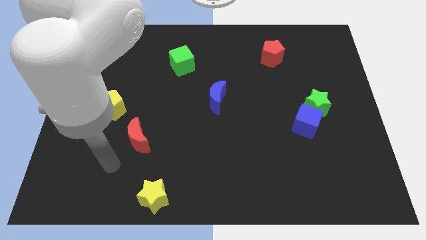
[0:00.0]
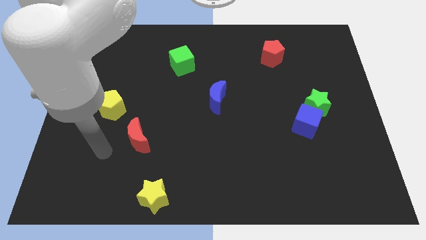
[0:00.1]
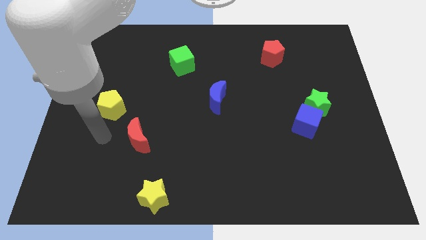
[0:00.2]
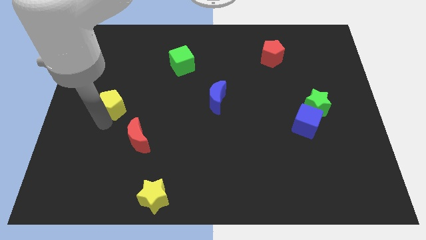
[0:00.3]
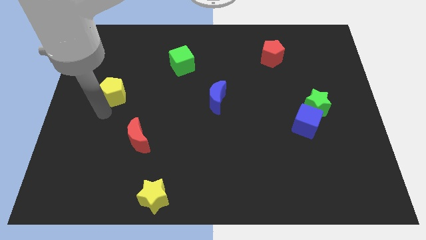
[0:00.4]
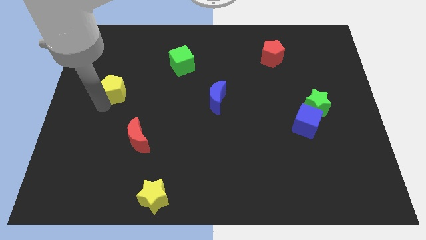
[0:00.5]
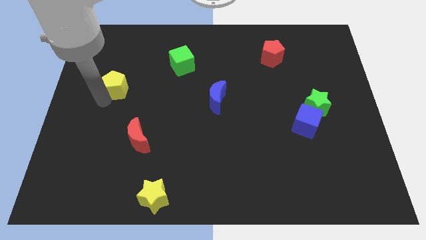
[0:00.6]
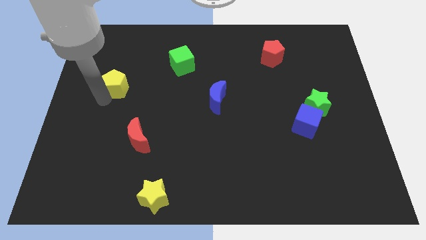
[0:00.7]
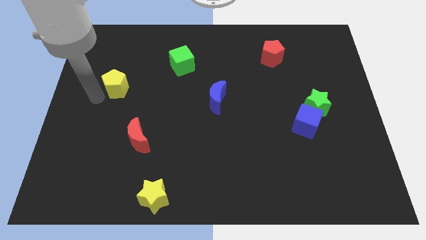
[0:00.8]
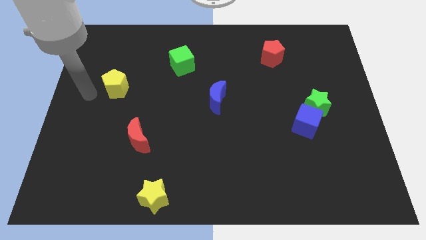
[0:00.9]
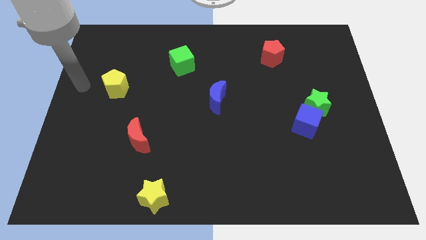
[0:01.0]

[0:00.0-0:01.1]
move yellow pentagon diagonally above red moon

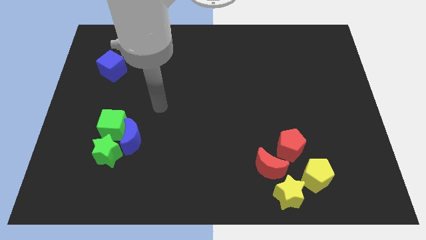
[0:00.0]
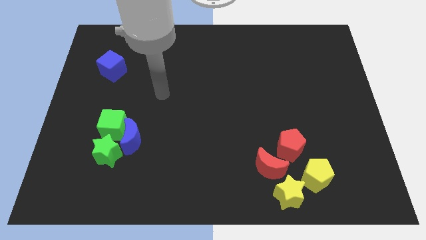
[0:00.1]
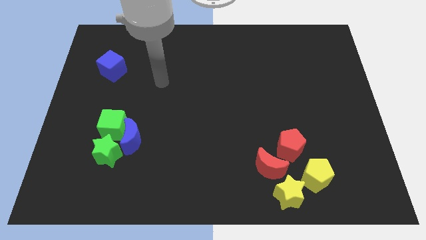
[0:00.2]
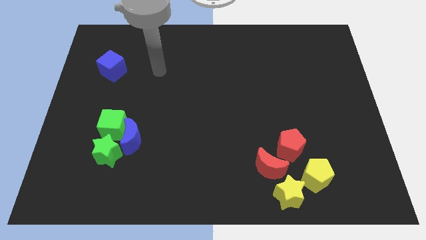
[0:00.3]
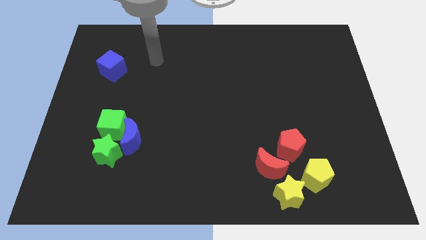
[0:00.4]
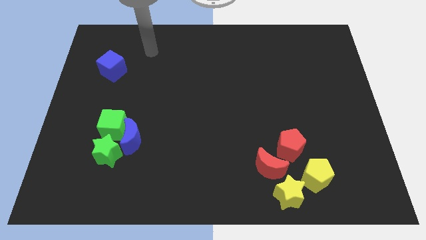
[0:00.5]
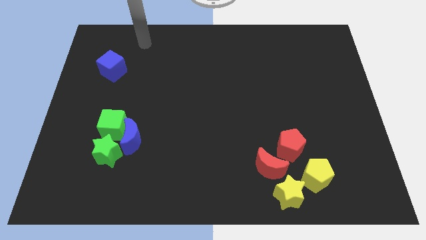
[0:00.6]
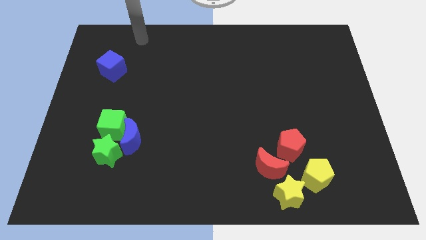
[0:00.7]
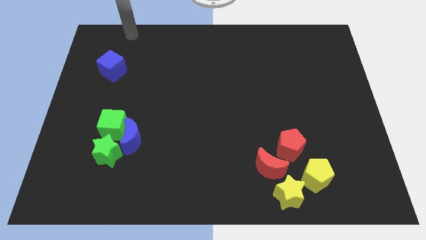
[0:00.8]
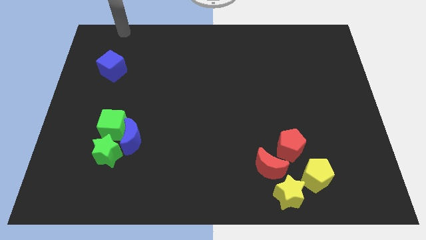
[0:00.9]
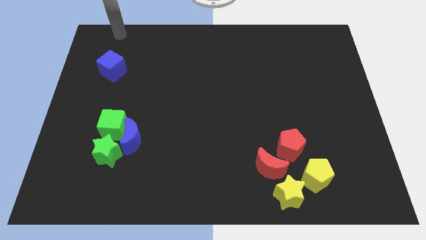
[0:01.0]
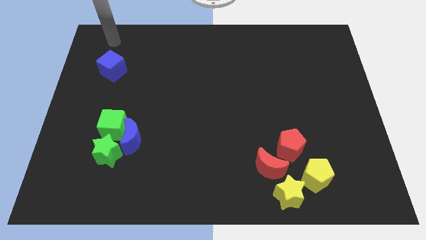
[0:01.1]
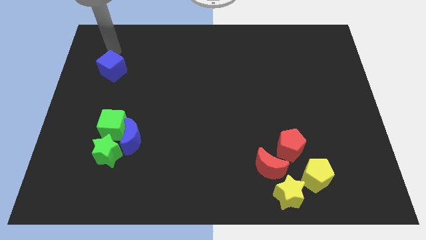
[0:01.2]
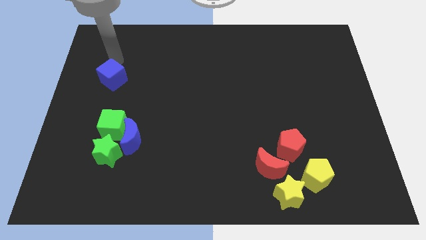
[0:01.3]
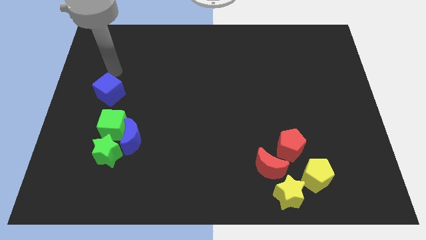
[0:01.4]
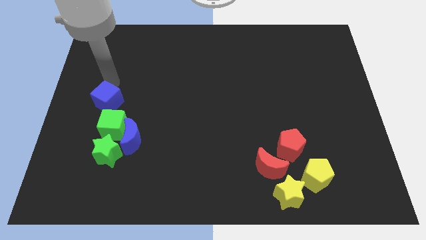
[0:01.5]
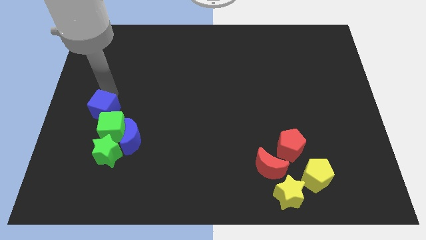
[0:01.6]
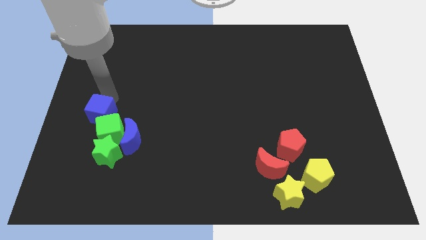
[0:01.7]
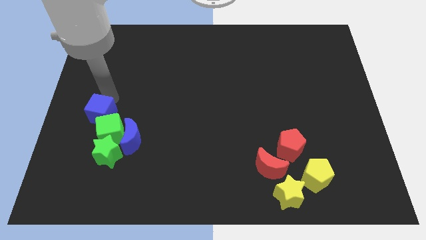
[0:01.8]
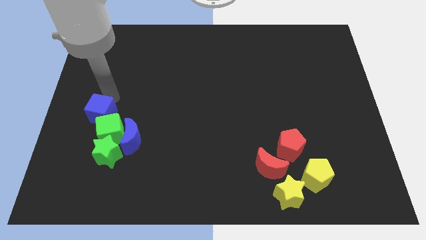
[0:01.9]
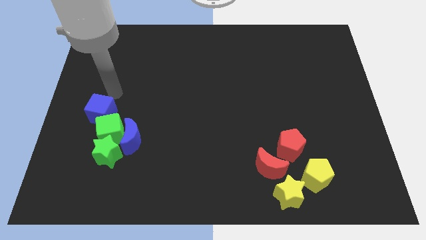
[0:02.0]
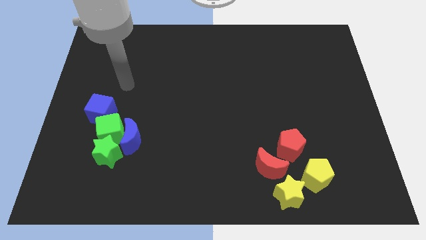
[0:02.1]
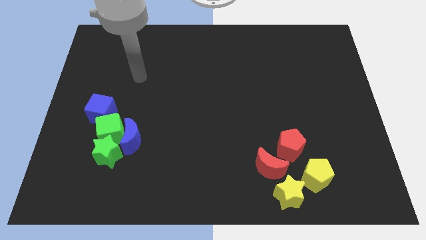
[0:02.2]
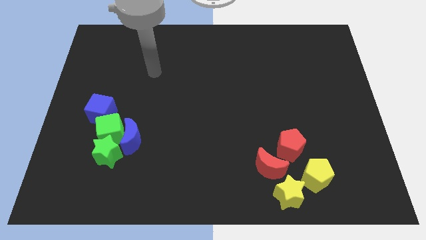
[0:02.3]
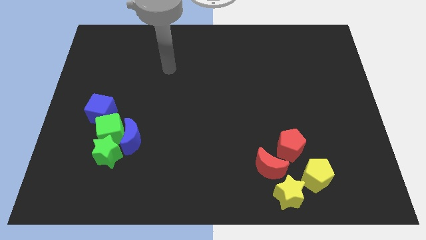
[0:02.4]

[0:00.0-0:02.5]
move the blue cube into the green cube

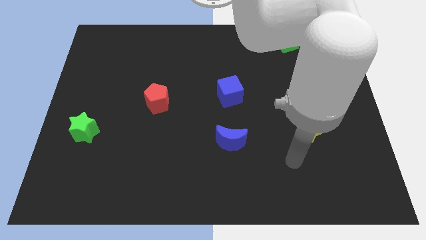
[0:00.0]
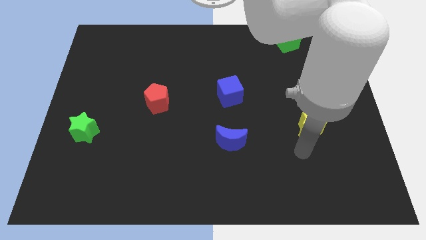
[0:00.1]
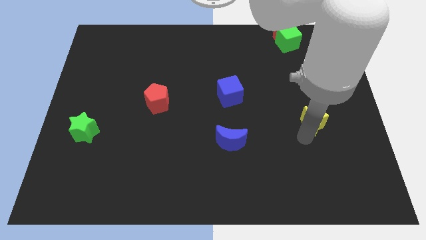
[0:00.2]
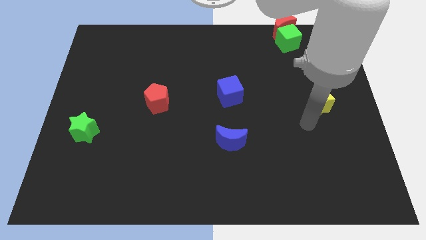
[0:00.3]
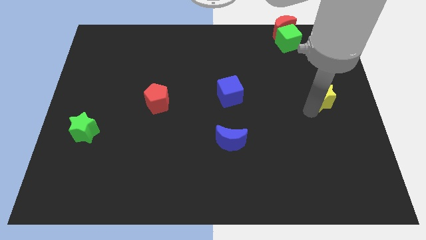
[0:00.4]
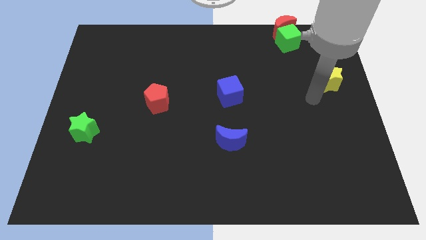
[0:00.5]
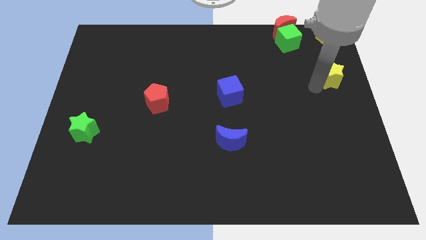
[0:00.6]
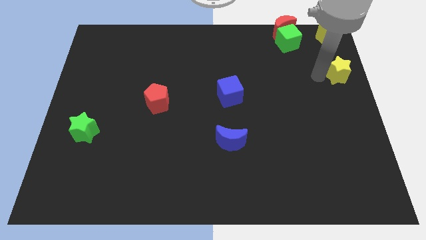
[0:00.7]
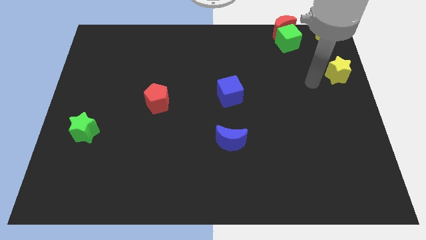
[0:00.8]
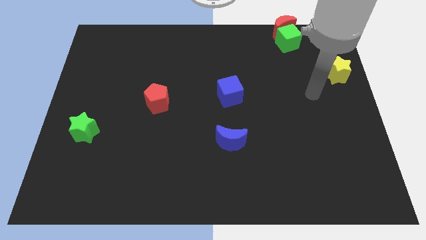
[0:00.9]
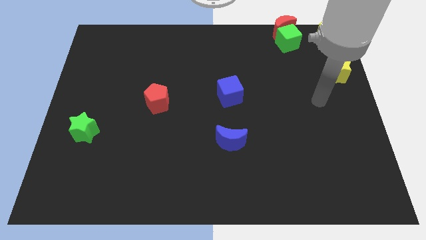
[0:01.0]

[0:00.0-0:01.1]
move the yellow star towards the top right of the board

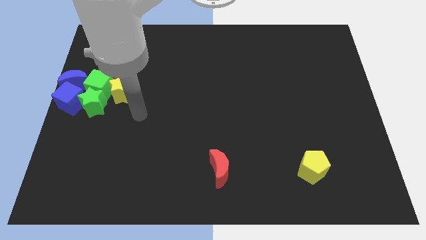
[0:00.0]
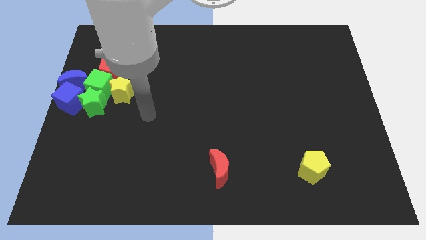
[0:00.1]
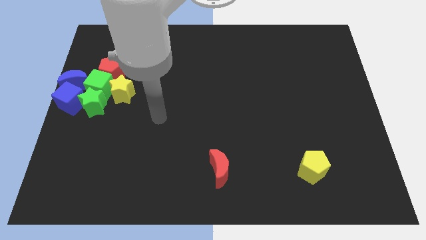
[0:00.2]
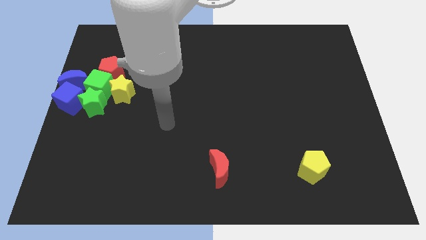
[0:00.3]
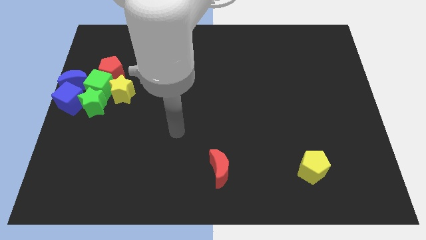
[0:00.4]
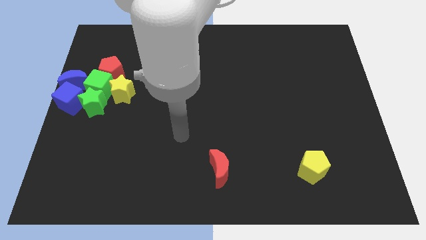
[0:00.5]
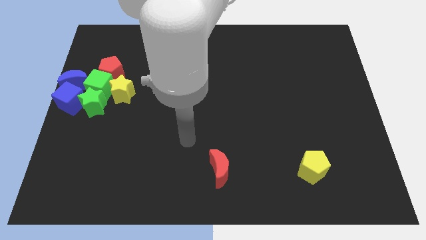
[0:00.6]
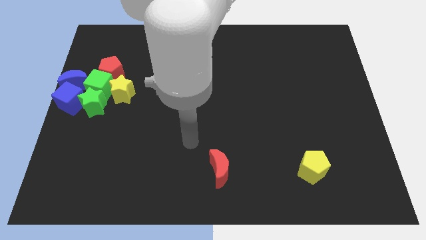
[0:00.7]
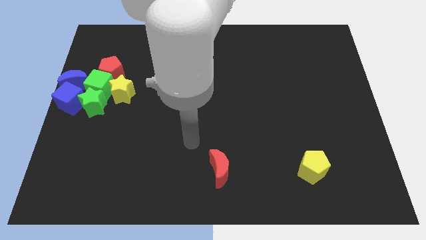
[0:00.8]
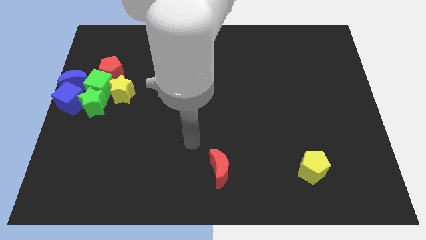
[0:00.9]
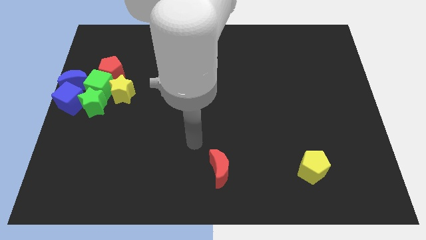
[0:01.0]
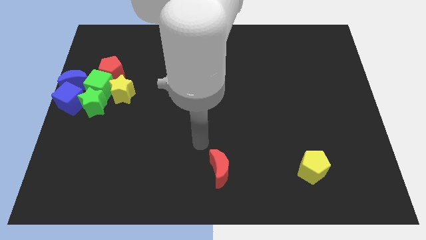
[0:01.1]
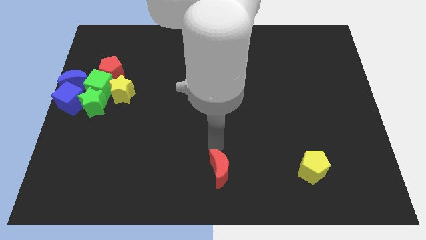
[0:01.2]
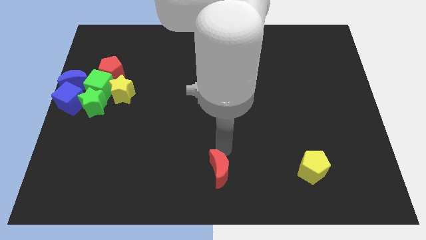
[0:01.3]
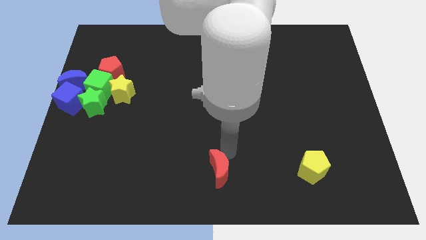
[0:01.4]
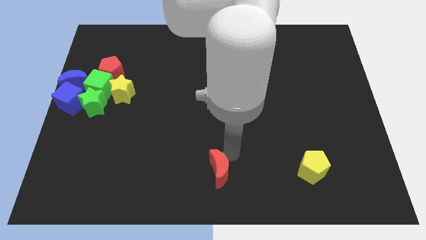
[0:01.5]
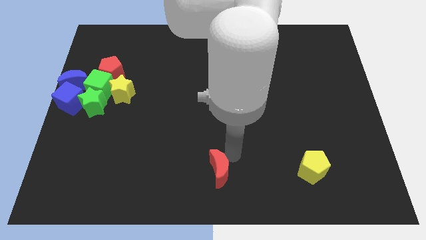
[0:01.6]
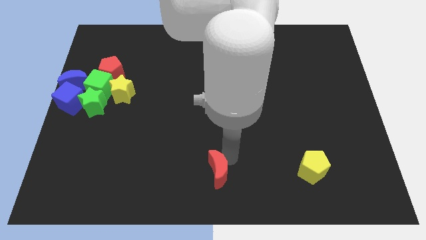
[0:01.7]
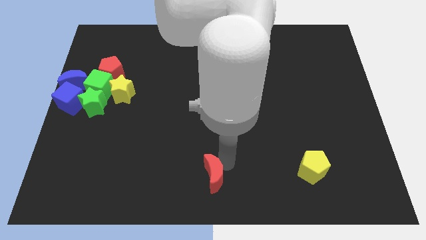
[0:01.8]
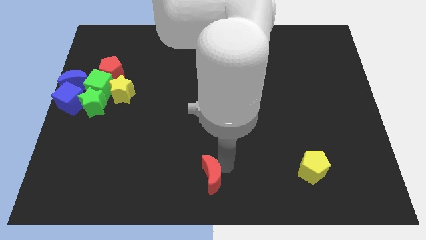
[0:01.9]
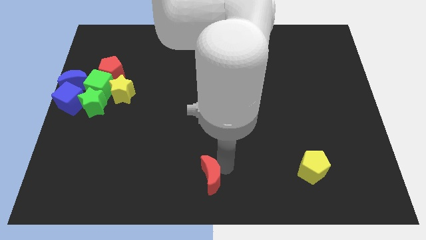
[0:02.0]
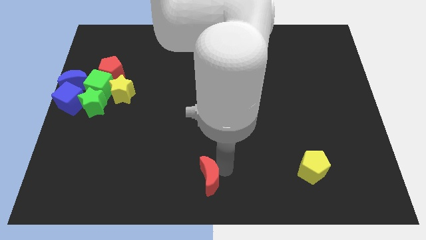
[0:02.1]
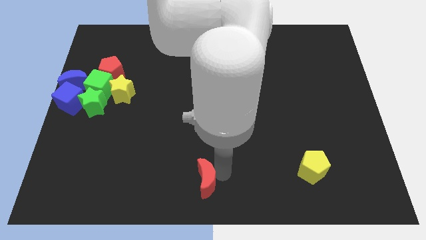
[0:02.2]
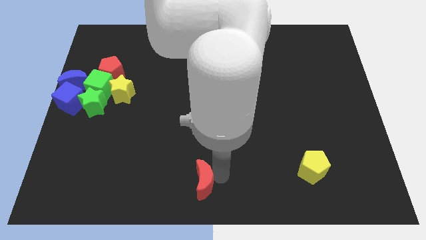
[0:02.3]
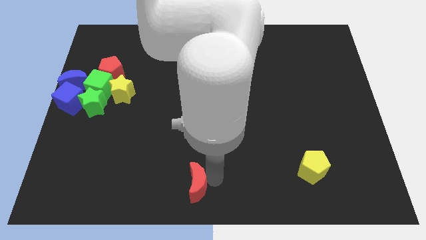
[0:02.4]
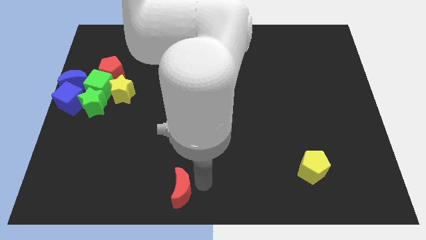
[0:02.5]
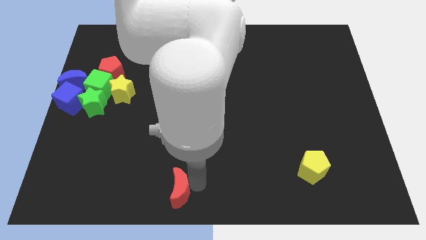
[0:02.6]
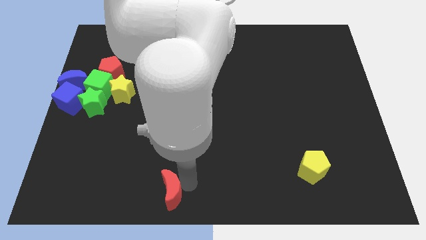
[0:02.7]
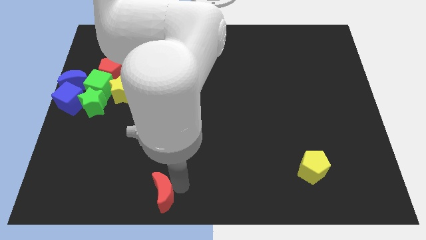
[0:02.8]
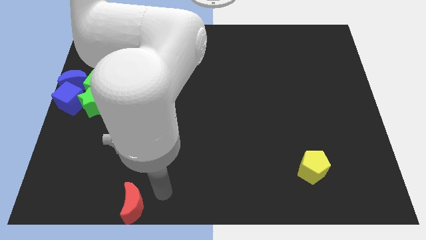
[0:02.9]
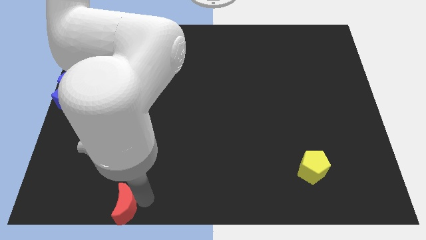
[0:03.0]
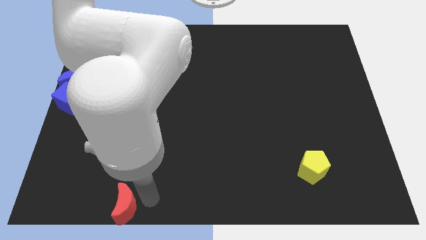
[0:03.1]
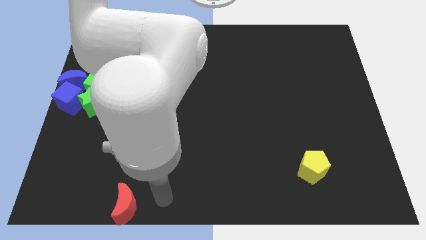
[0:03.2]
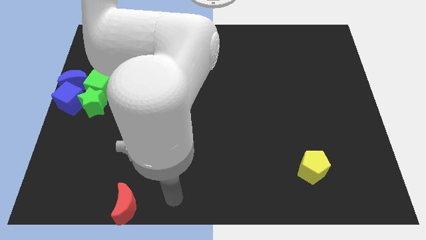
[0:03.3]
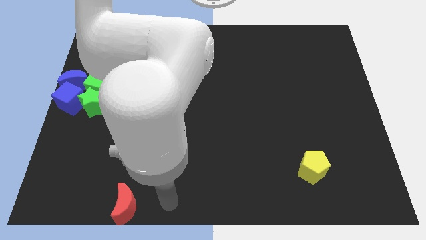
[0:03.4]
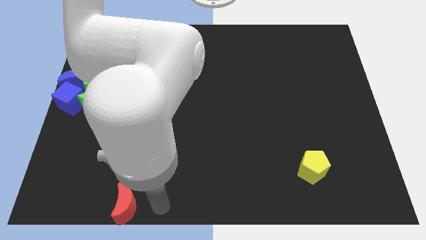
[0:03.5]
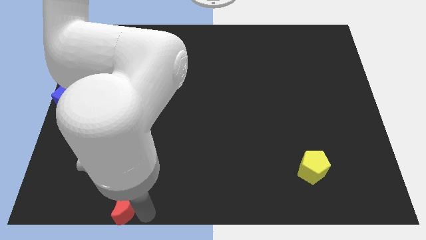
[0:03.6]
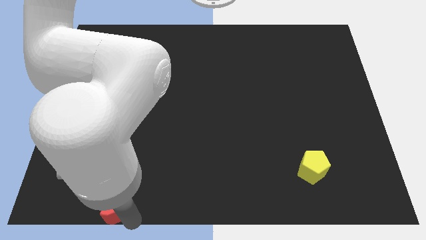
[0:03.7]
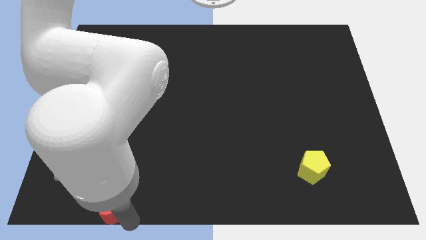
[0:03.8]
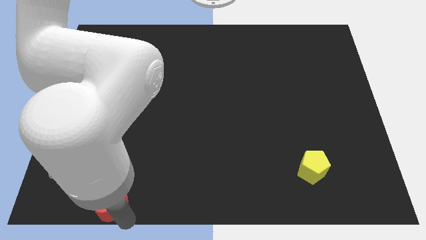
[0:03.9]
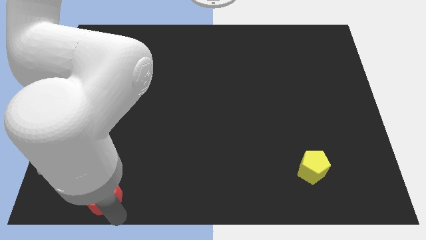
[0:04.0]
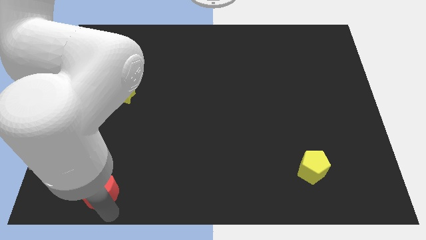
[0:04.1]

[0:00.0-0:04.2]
move the red crescent to the left of the board
